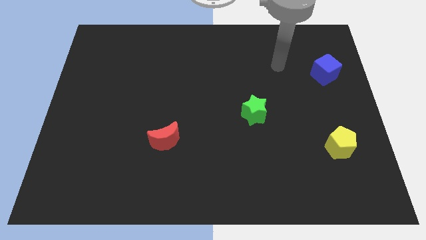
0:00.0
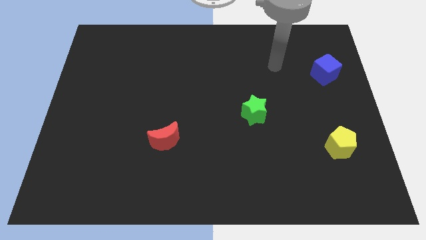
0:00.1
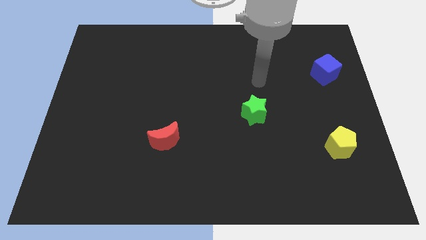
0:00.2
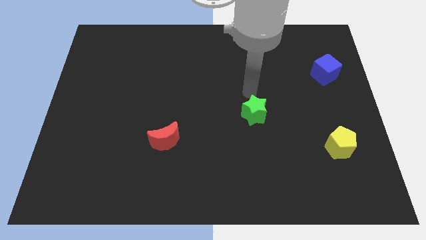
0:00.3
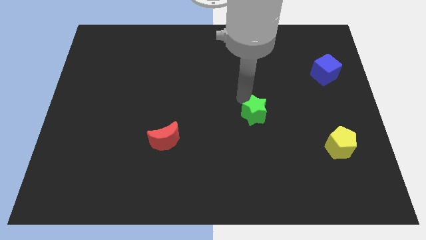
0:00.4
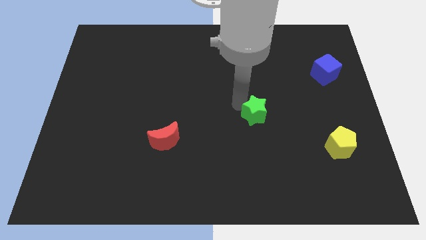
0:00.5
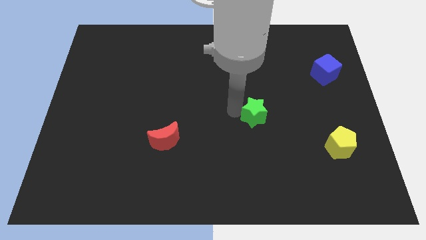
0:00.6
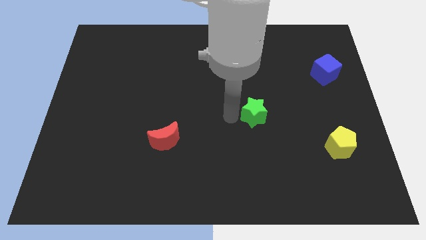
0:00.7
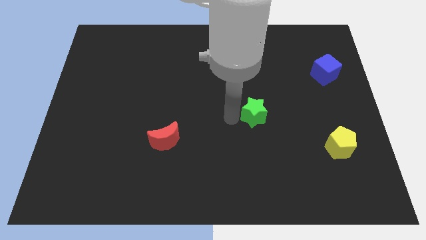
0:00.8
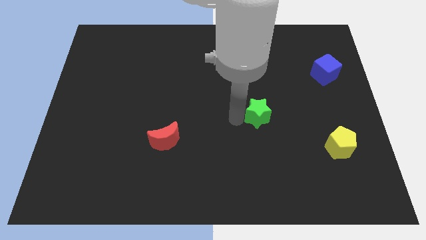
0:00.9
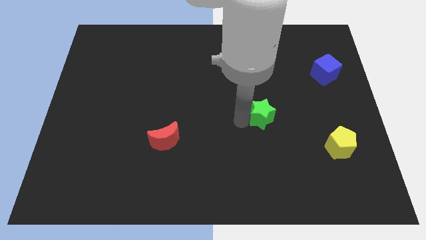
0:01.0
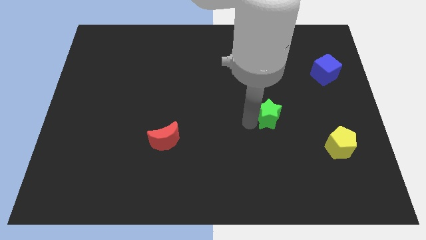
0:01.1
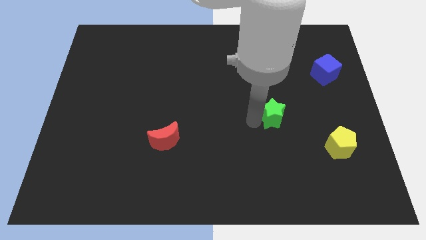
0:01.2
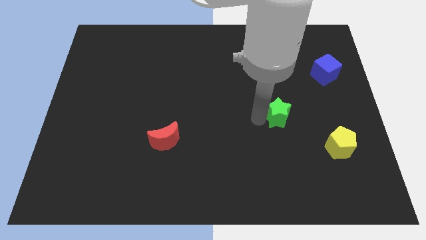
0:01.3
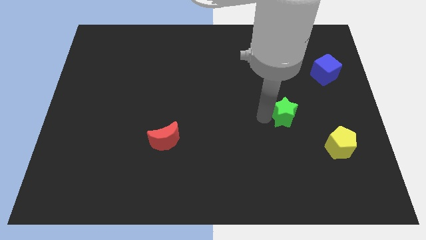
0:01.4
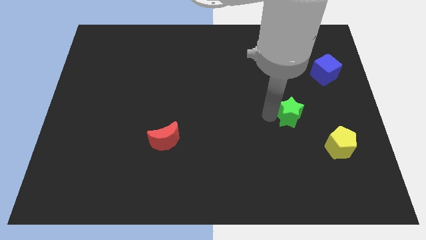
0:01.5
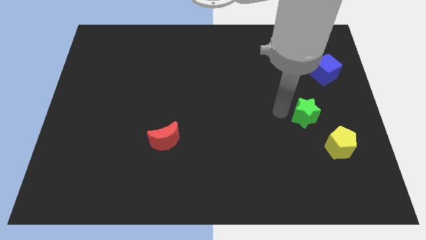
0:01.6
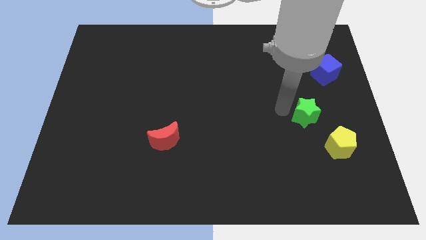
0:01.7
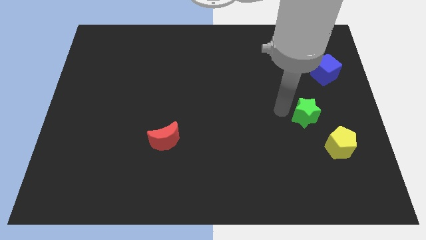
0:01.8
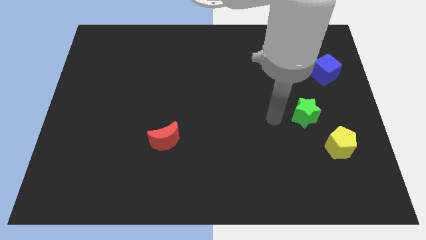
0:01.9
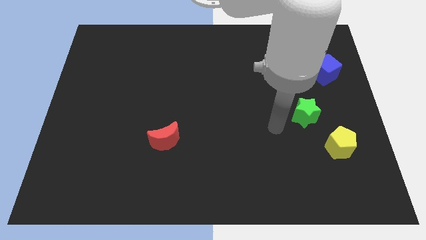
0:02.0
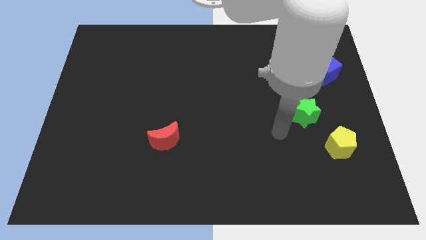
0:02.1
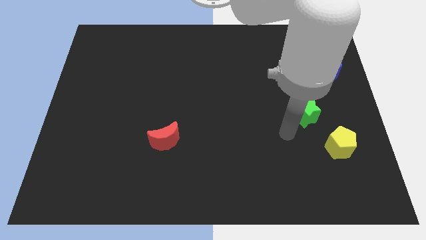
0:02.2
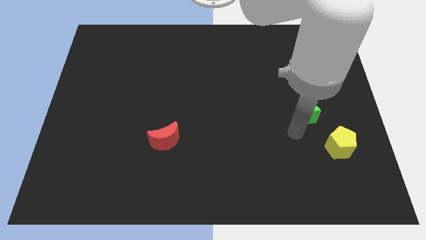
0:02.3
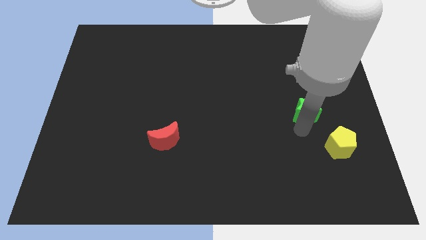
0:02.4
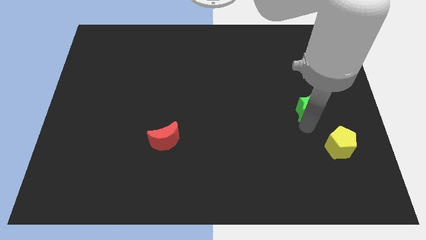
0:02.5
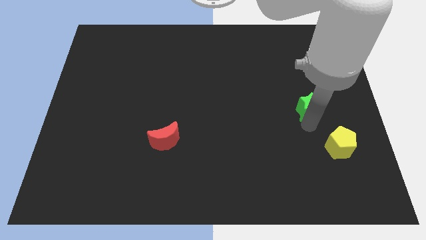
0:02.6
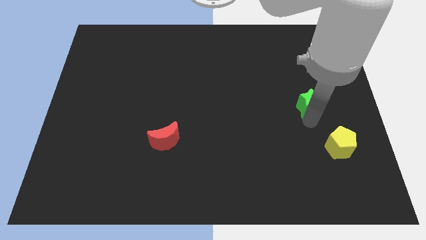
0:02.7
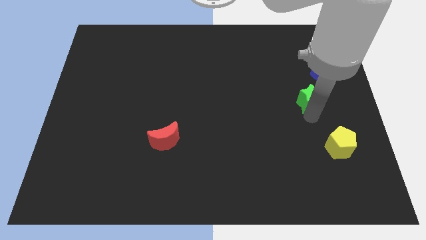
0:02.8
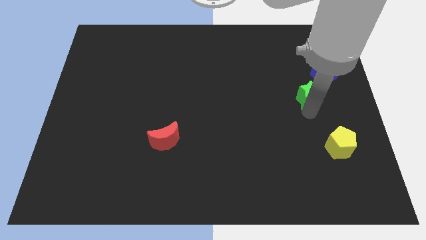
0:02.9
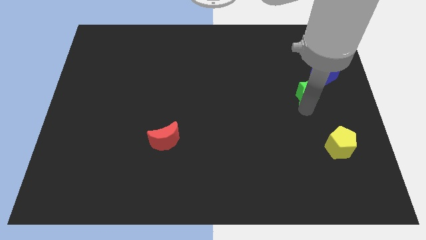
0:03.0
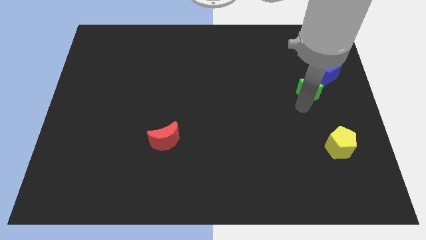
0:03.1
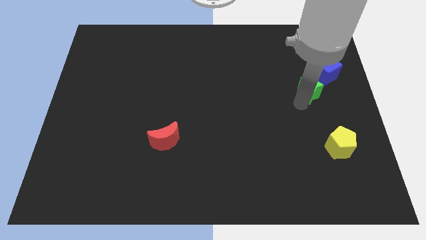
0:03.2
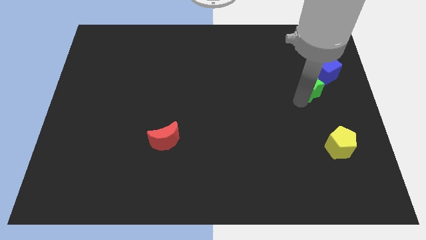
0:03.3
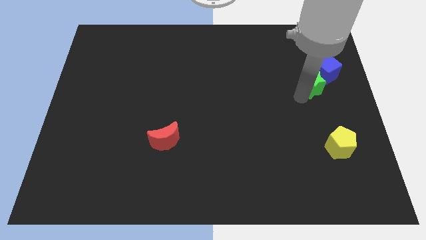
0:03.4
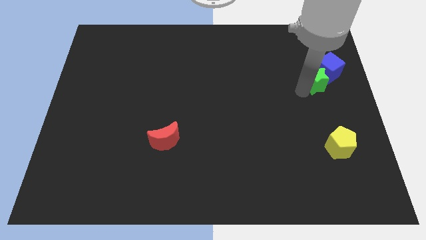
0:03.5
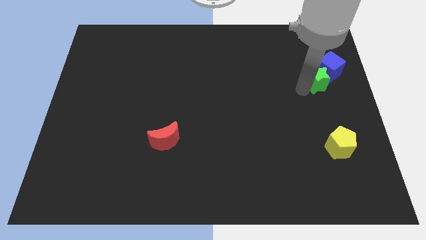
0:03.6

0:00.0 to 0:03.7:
put the green star to the blue cube

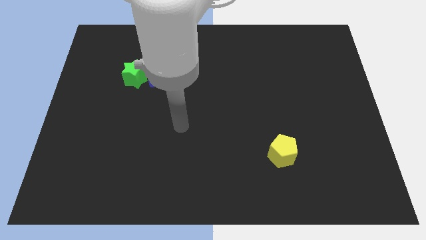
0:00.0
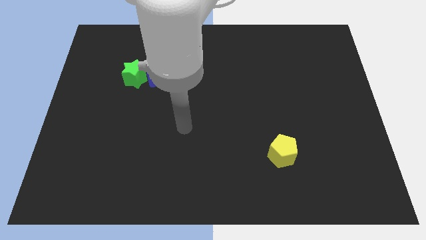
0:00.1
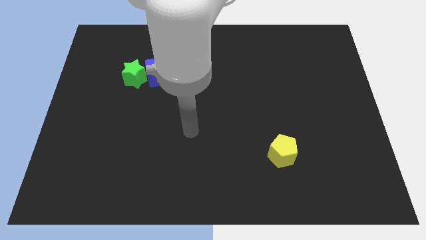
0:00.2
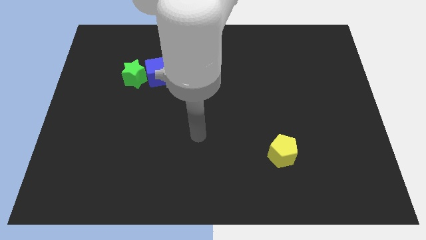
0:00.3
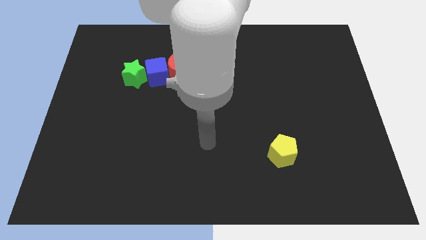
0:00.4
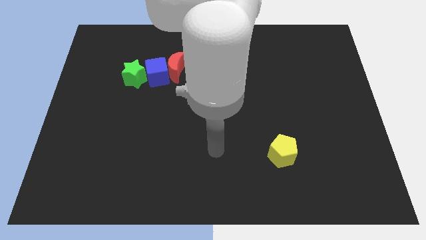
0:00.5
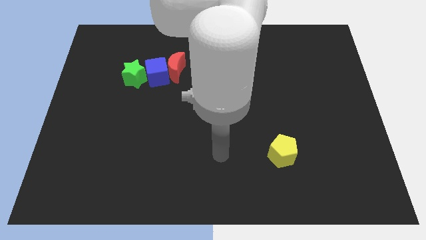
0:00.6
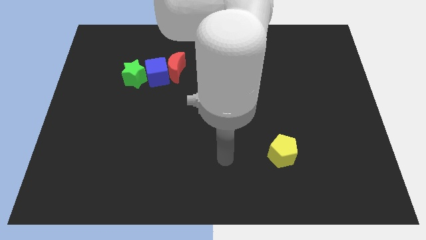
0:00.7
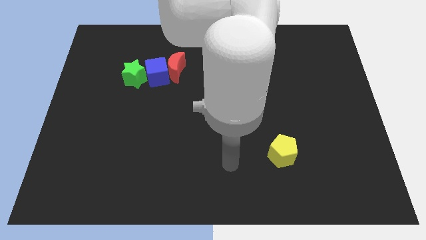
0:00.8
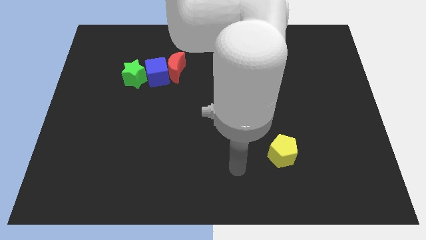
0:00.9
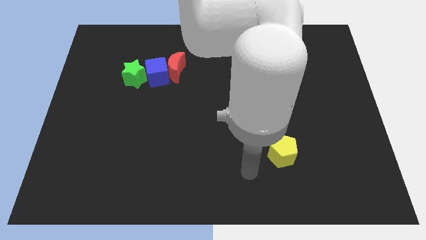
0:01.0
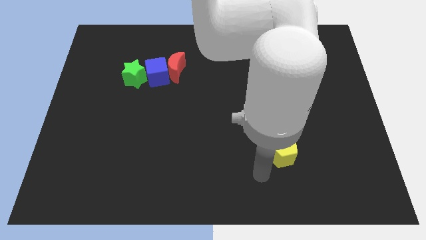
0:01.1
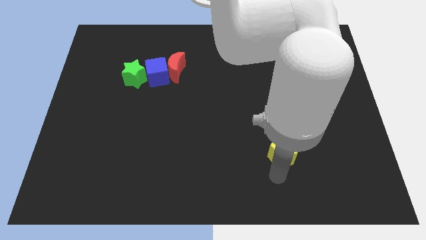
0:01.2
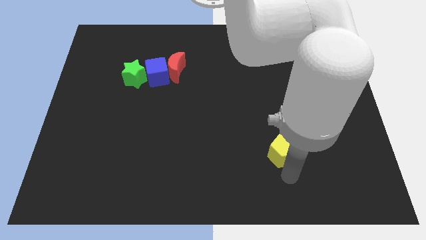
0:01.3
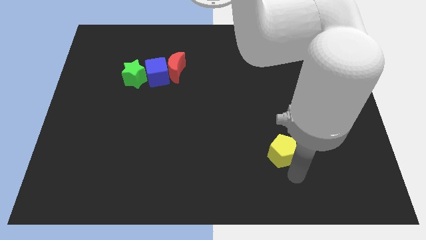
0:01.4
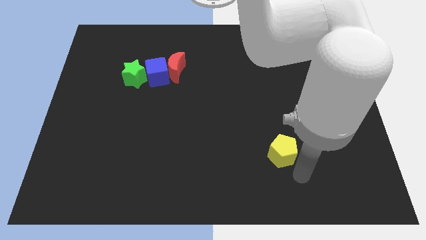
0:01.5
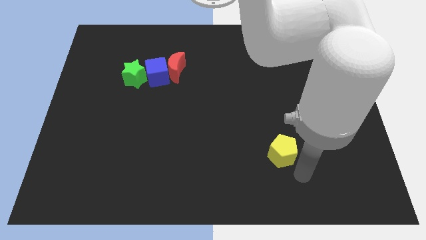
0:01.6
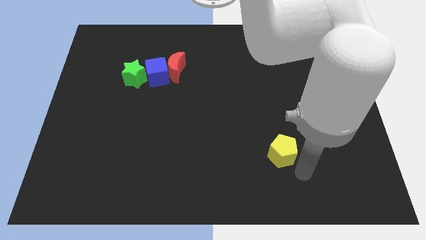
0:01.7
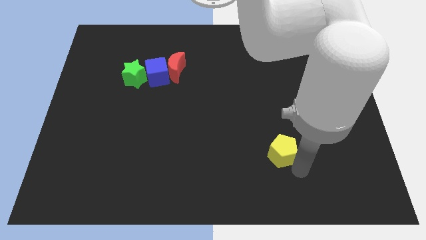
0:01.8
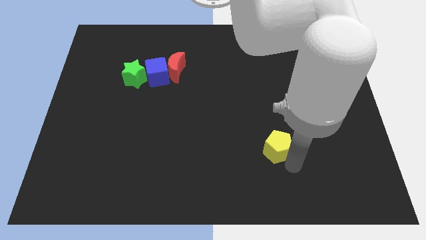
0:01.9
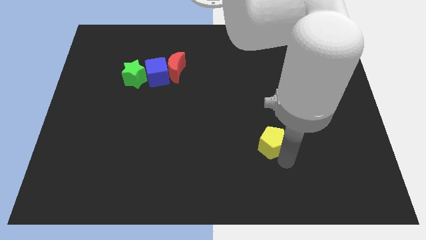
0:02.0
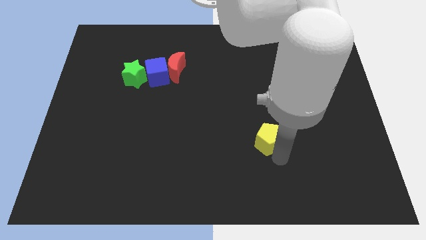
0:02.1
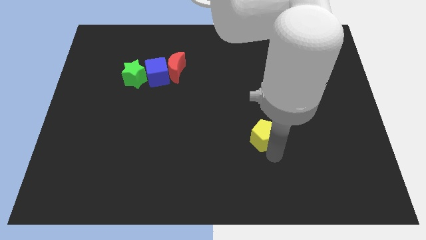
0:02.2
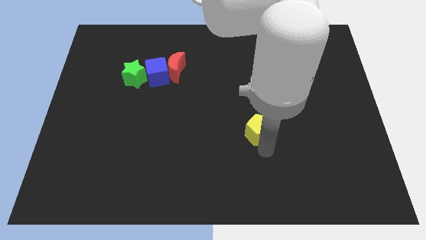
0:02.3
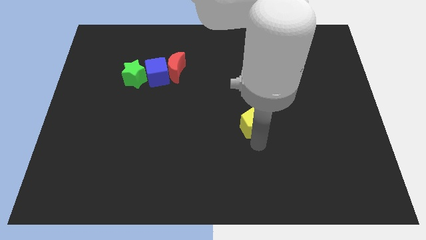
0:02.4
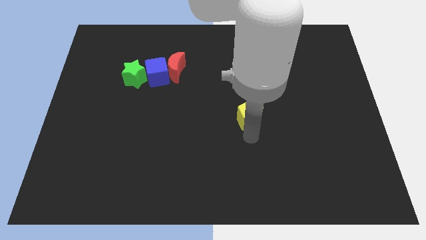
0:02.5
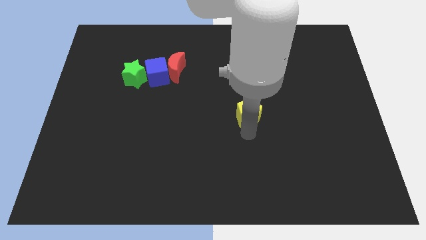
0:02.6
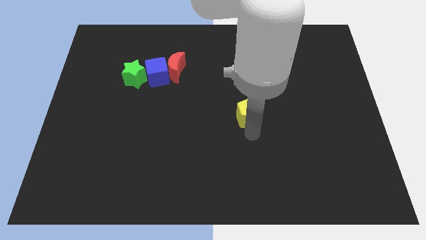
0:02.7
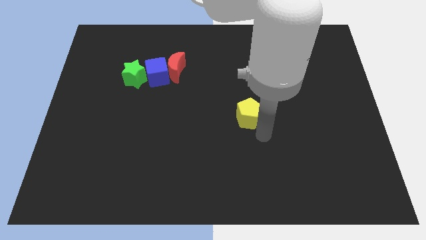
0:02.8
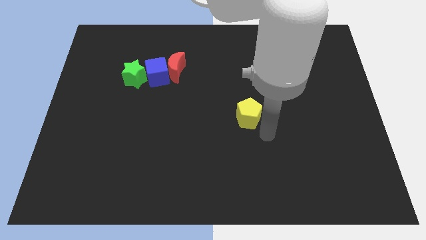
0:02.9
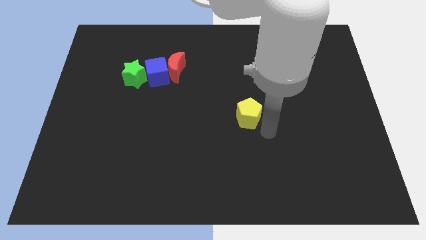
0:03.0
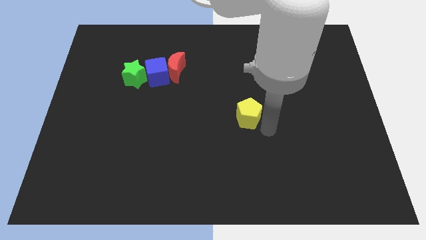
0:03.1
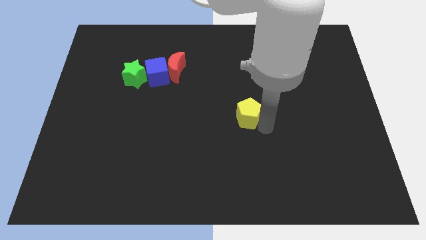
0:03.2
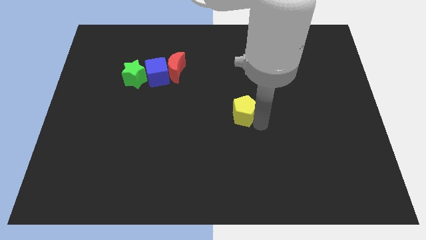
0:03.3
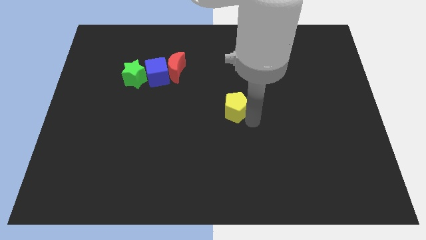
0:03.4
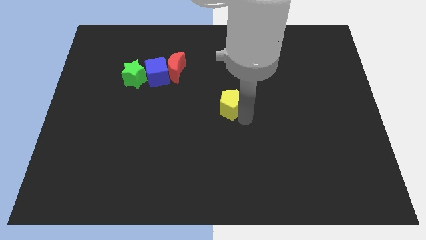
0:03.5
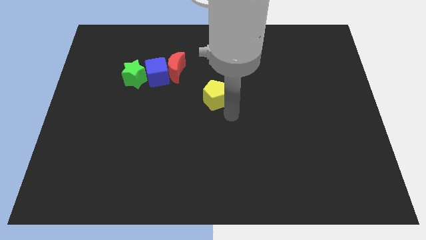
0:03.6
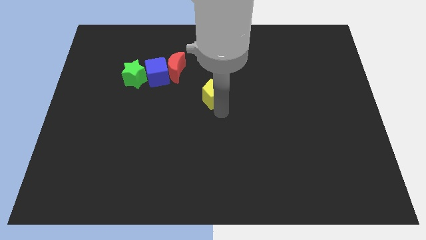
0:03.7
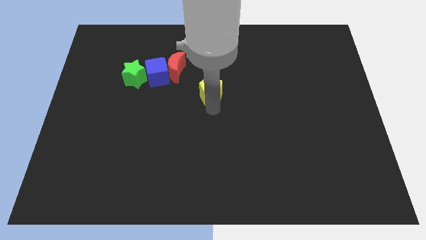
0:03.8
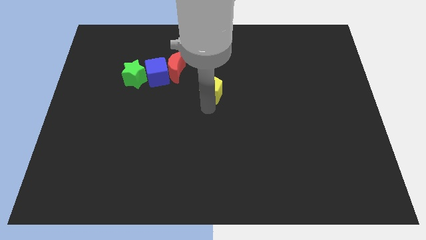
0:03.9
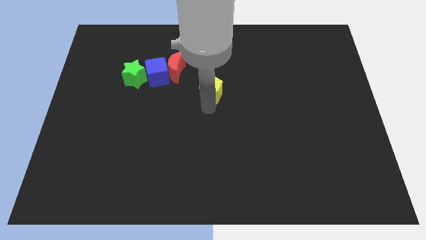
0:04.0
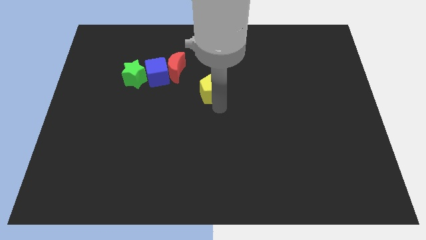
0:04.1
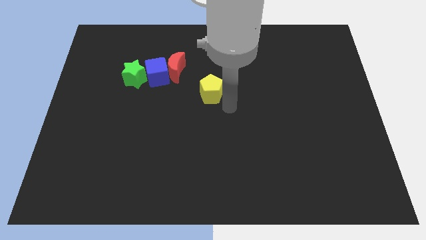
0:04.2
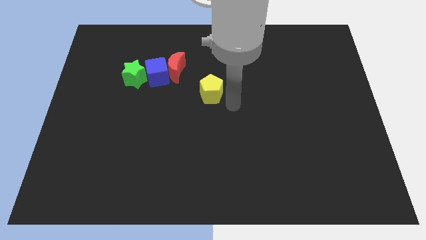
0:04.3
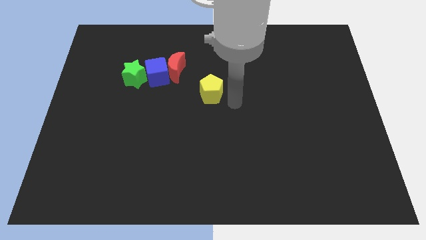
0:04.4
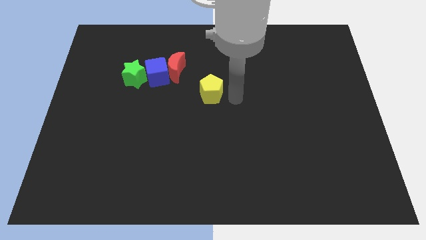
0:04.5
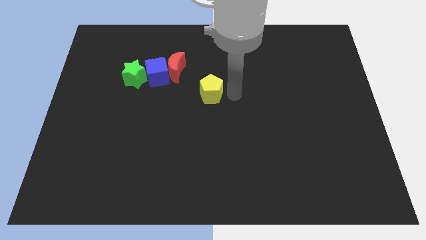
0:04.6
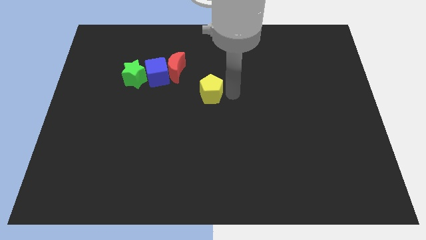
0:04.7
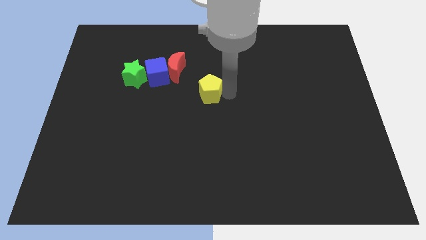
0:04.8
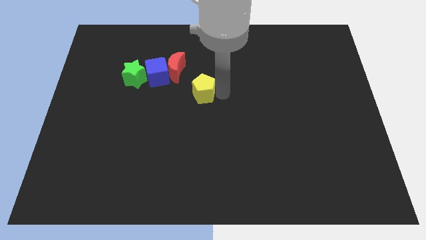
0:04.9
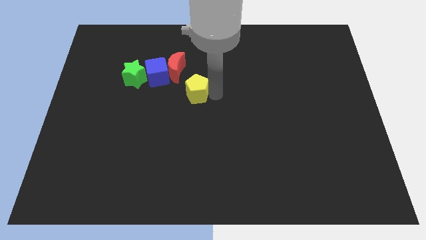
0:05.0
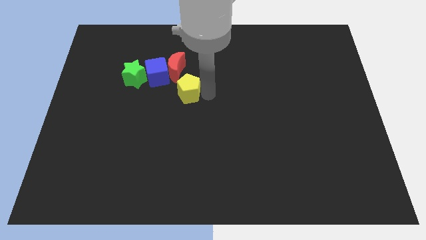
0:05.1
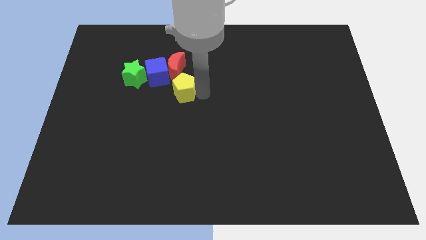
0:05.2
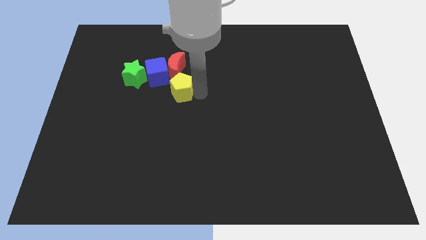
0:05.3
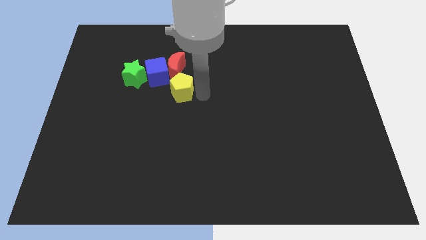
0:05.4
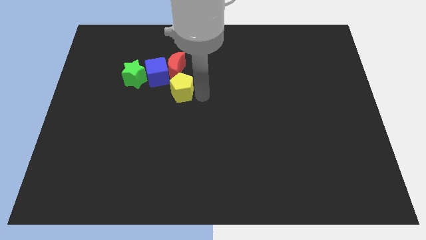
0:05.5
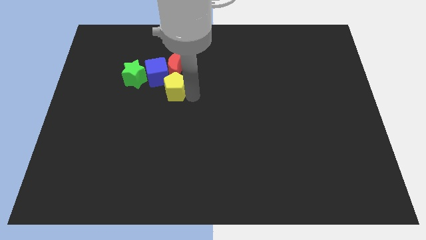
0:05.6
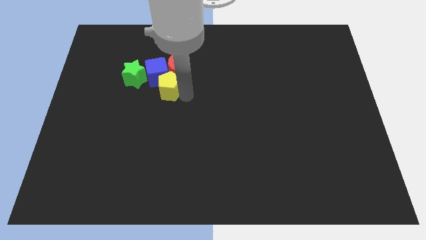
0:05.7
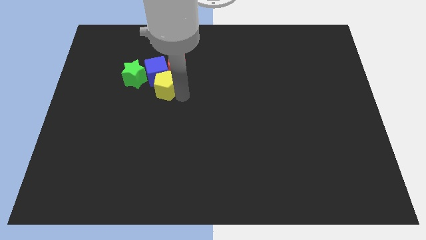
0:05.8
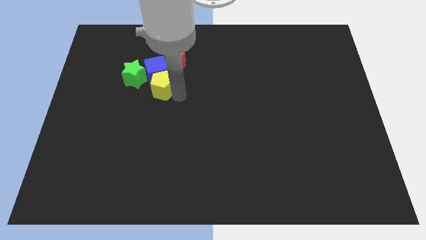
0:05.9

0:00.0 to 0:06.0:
push the yellow block next to the blue cube
